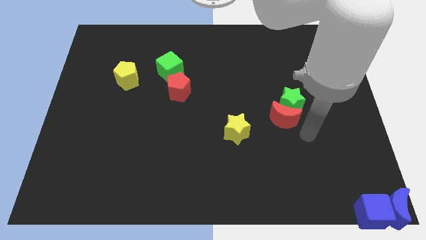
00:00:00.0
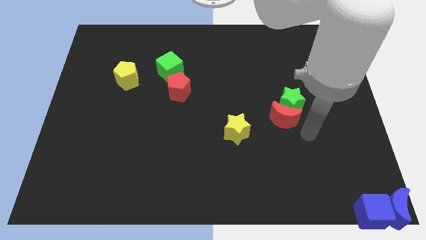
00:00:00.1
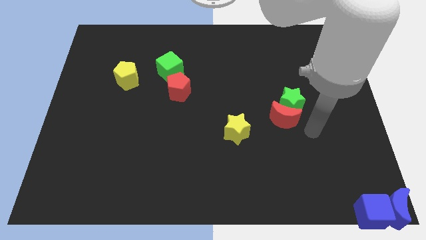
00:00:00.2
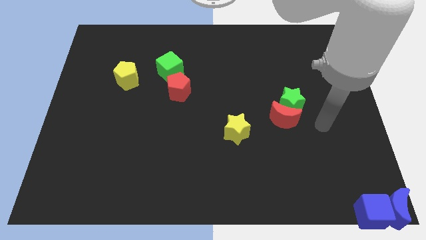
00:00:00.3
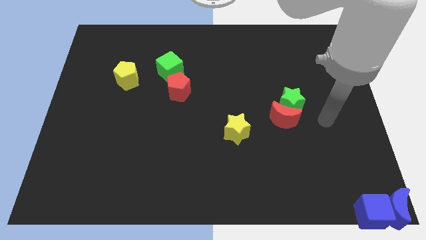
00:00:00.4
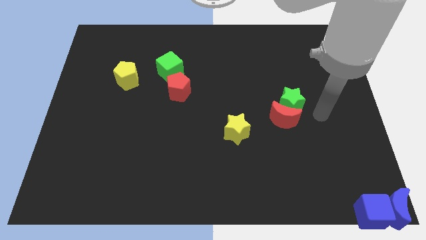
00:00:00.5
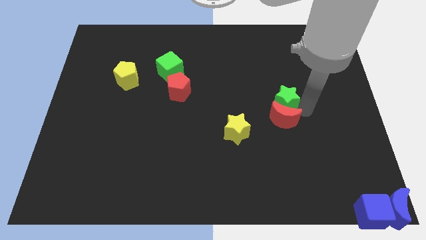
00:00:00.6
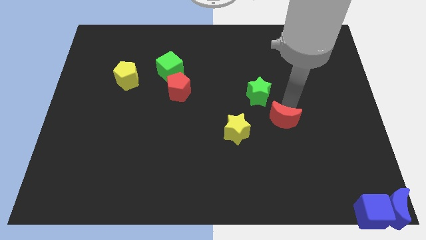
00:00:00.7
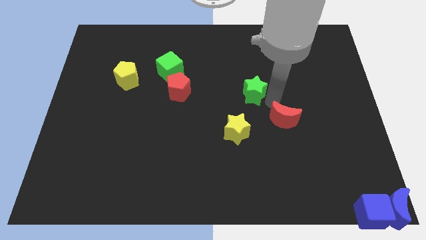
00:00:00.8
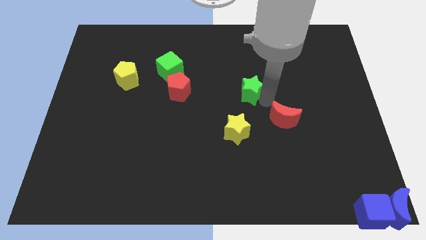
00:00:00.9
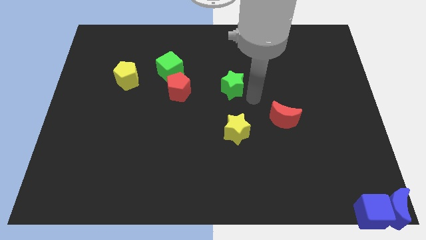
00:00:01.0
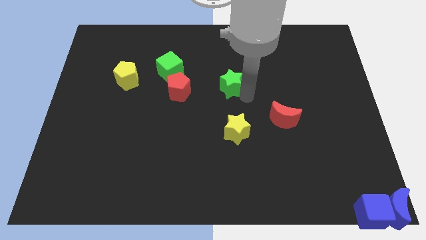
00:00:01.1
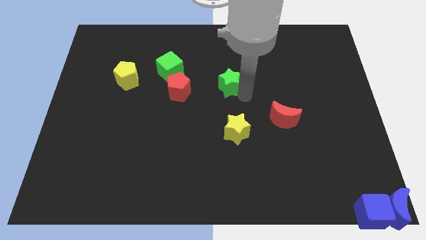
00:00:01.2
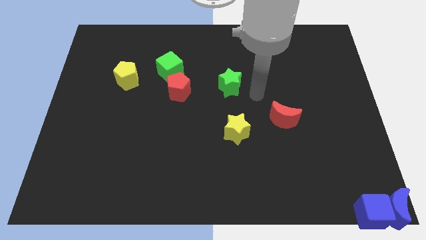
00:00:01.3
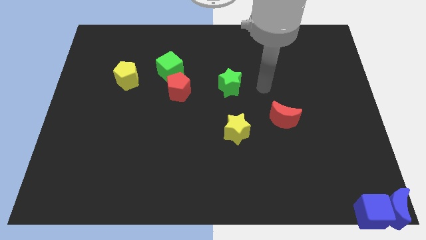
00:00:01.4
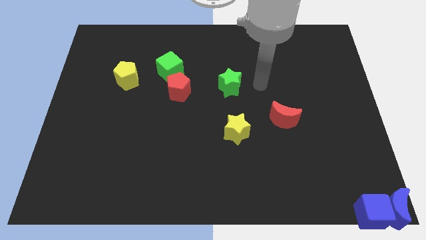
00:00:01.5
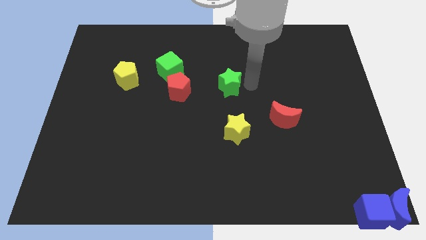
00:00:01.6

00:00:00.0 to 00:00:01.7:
place the green star above the yellow star

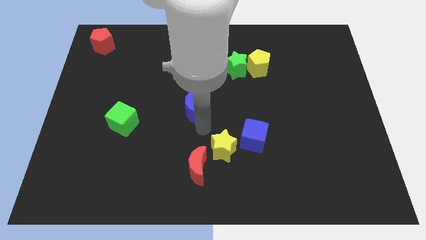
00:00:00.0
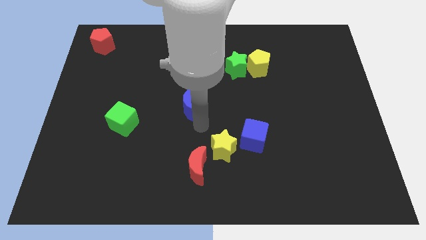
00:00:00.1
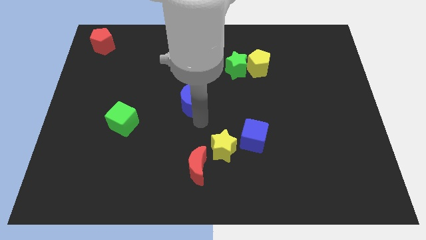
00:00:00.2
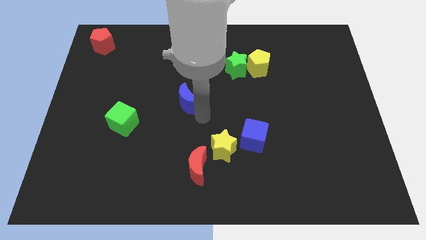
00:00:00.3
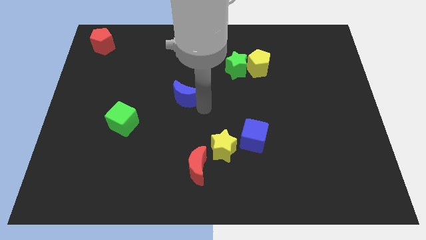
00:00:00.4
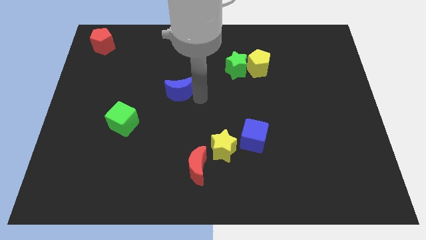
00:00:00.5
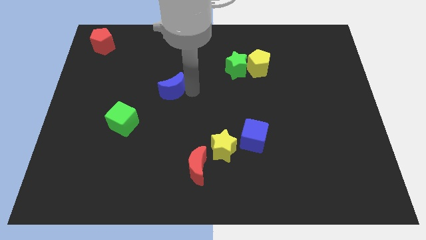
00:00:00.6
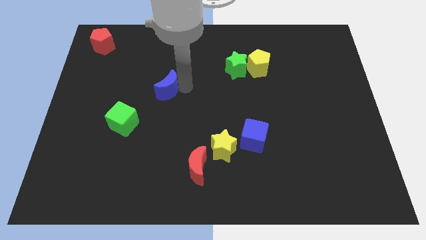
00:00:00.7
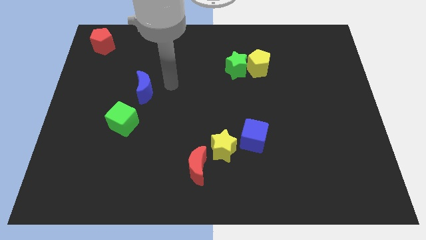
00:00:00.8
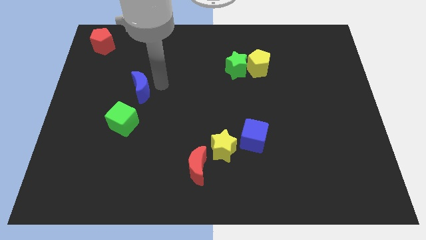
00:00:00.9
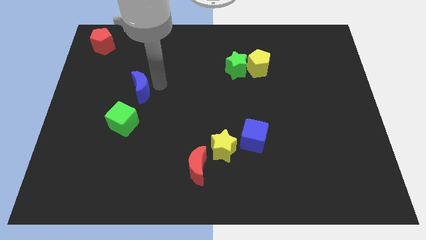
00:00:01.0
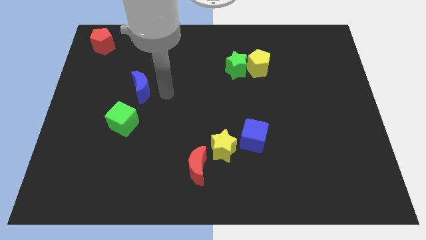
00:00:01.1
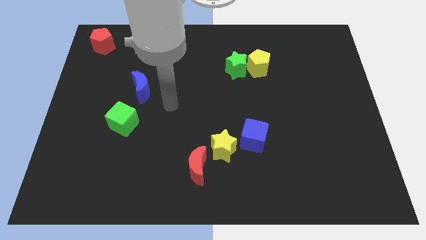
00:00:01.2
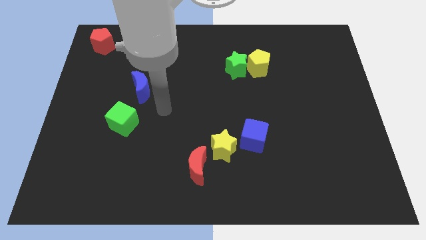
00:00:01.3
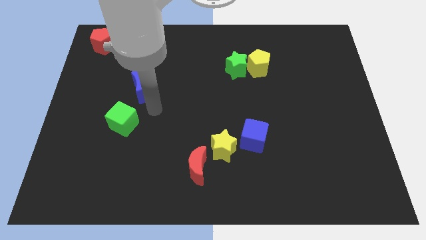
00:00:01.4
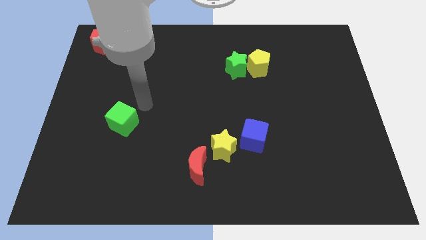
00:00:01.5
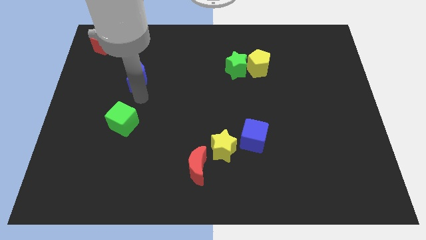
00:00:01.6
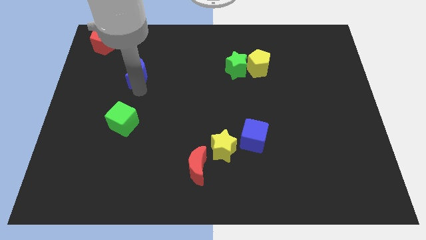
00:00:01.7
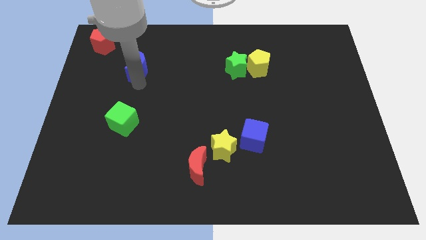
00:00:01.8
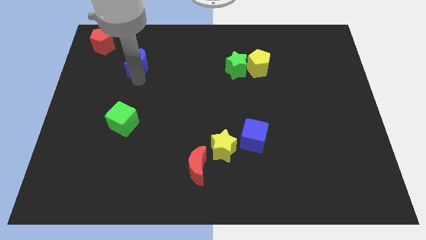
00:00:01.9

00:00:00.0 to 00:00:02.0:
place the blue semicircle vertically above the green cube

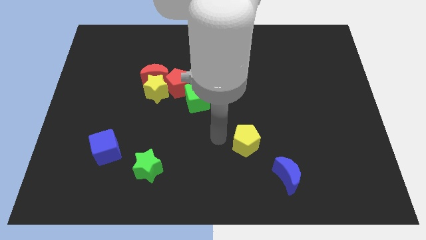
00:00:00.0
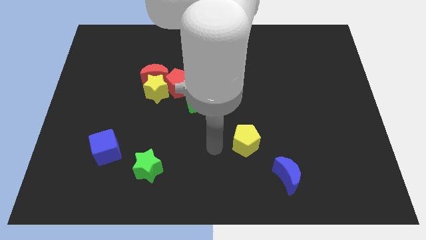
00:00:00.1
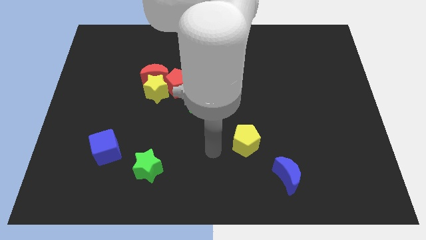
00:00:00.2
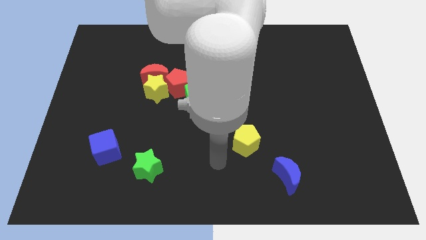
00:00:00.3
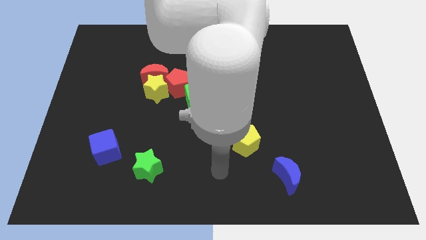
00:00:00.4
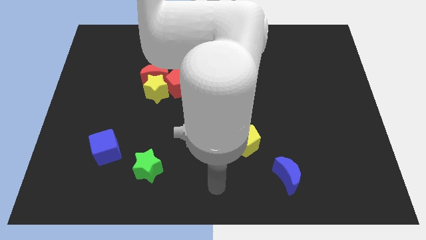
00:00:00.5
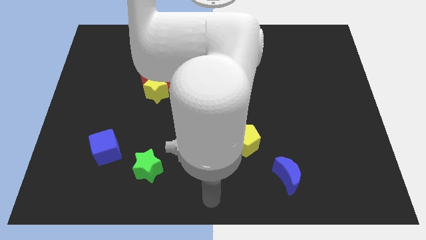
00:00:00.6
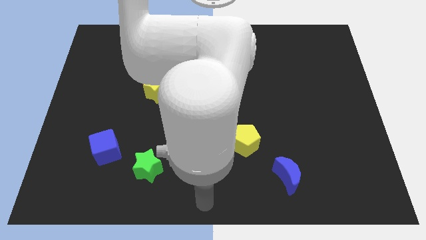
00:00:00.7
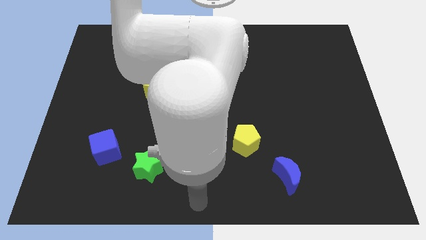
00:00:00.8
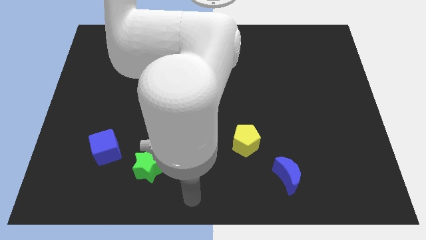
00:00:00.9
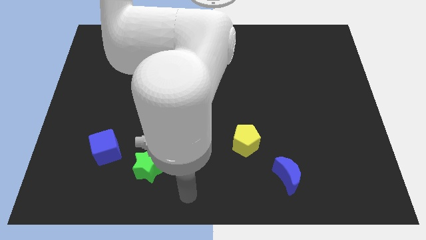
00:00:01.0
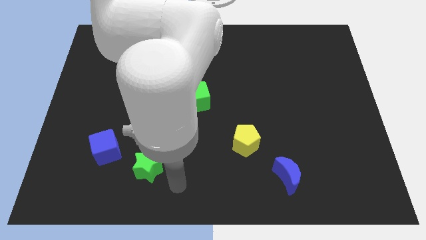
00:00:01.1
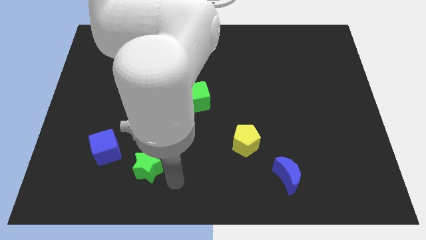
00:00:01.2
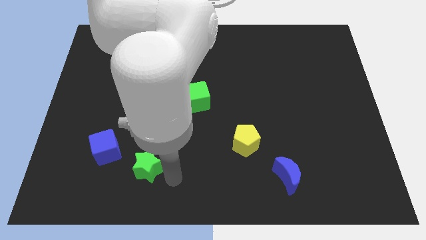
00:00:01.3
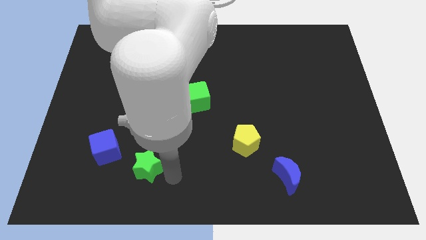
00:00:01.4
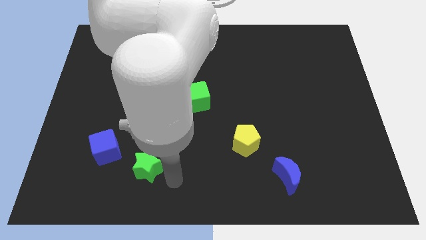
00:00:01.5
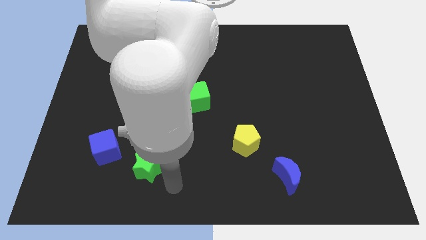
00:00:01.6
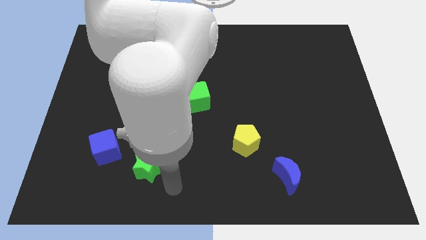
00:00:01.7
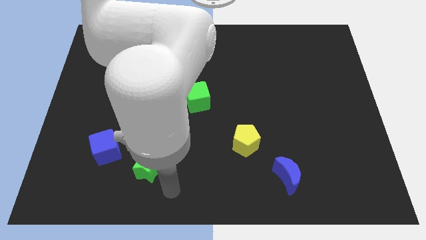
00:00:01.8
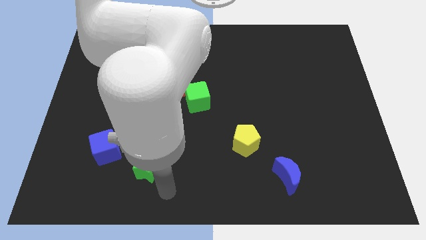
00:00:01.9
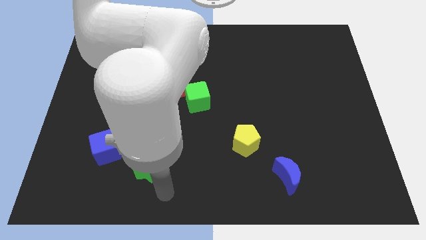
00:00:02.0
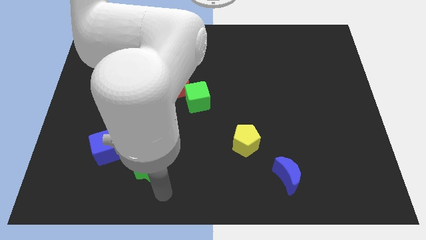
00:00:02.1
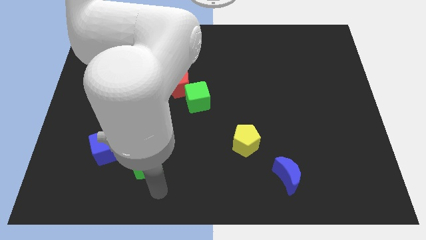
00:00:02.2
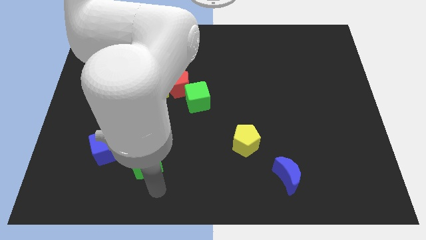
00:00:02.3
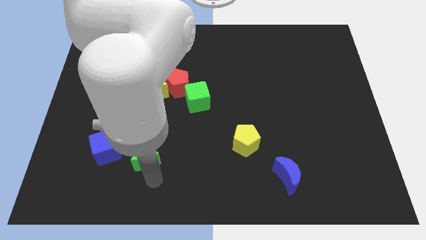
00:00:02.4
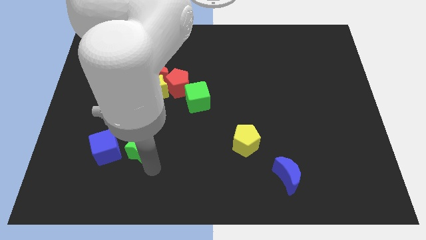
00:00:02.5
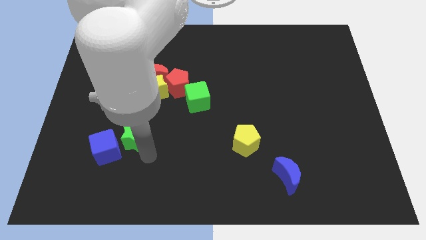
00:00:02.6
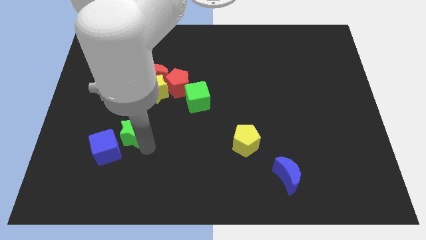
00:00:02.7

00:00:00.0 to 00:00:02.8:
move green star slightly up

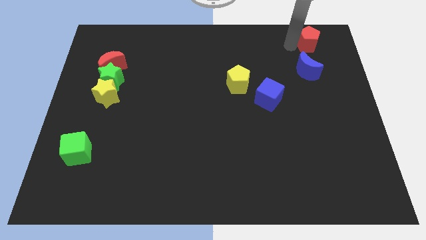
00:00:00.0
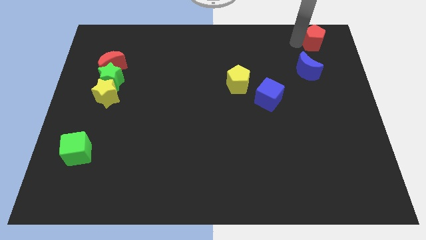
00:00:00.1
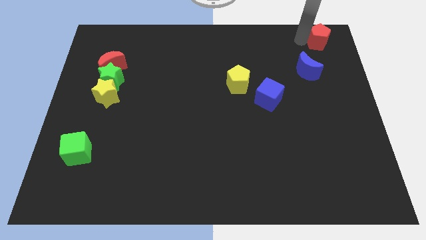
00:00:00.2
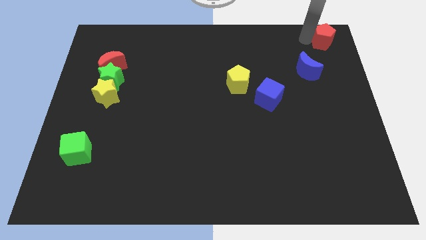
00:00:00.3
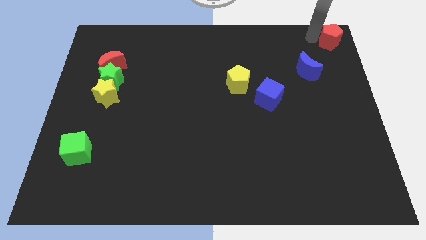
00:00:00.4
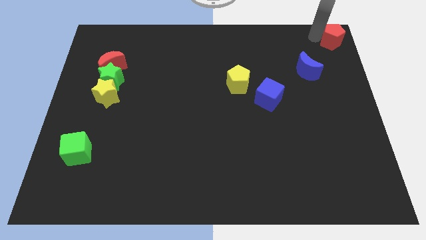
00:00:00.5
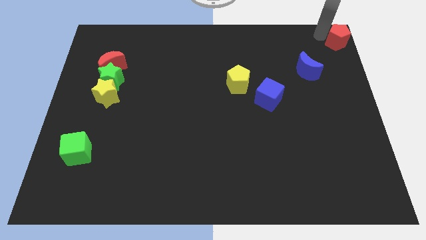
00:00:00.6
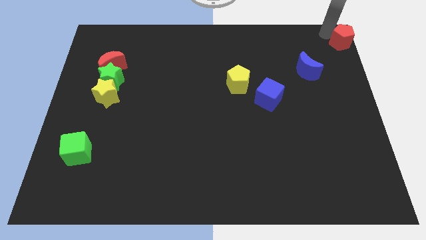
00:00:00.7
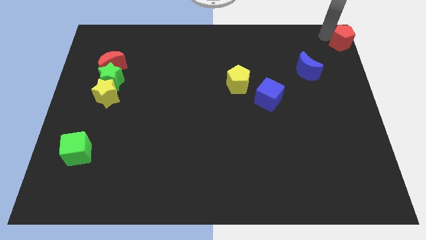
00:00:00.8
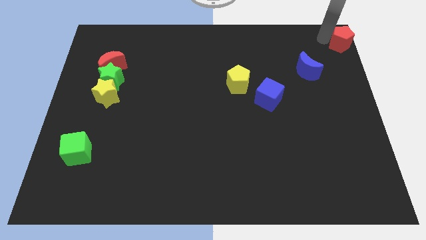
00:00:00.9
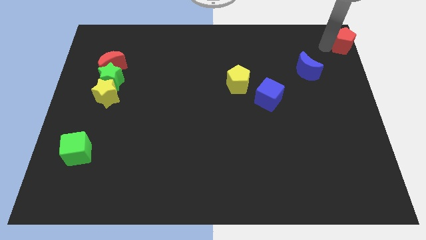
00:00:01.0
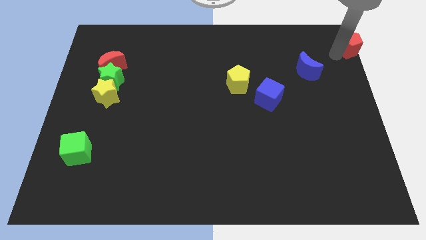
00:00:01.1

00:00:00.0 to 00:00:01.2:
push the red pentagon to the top right of the board

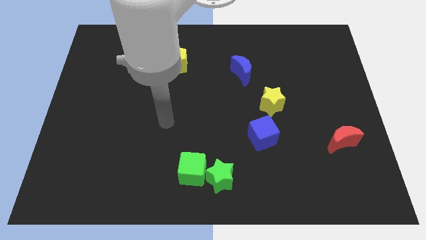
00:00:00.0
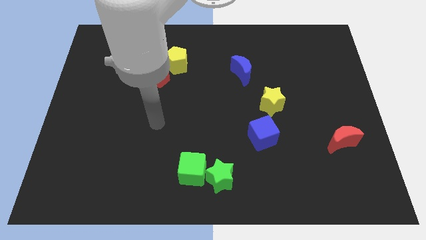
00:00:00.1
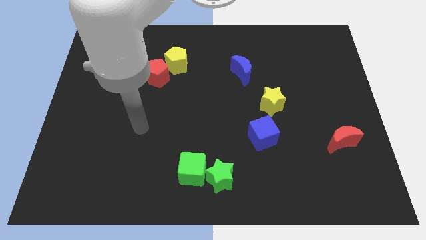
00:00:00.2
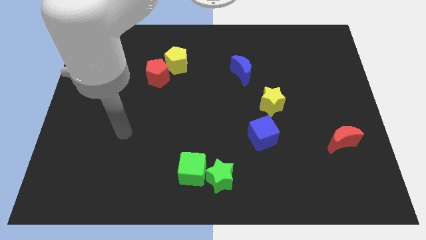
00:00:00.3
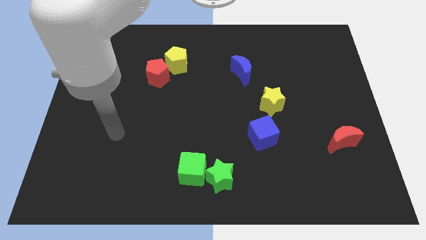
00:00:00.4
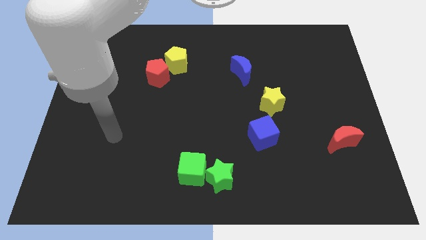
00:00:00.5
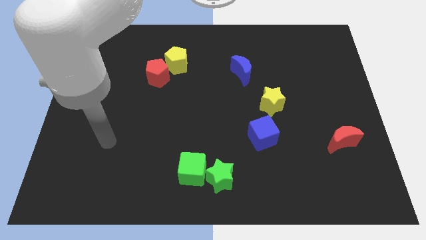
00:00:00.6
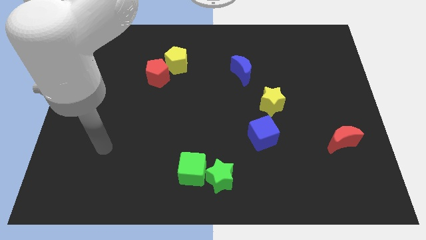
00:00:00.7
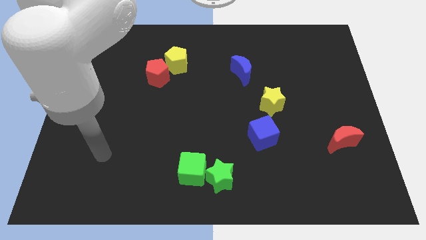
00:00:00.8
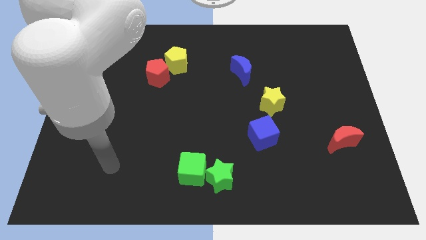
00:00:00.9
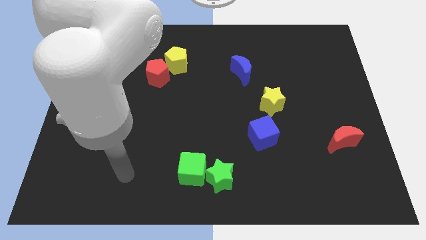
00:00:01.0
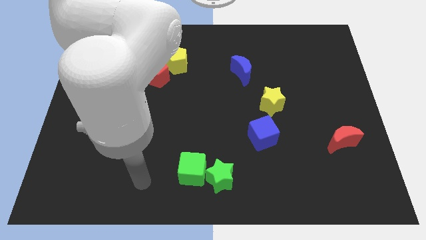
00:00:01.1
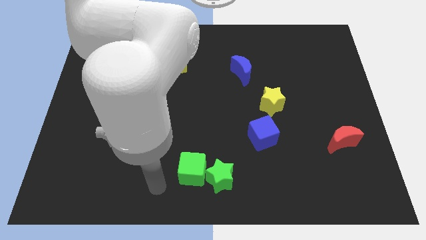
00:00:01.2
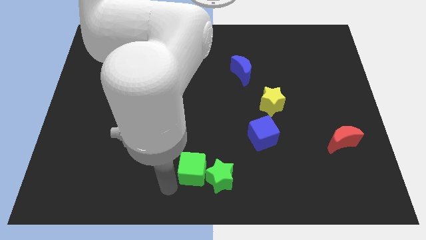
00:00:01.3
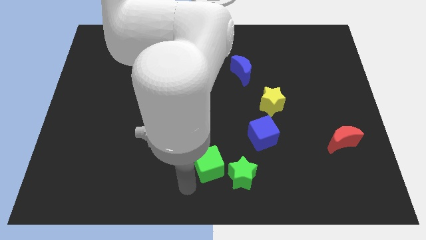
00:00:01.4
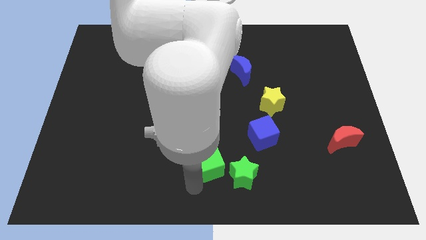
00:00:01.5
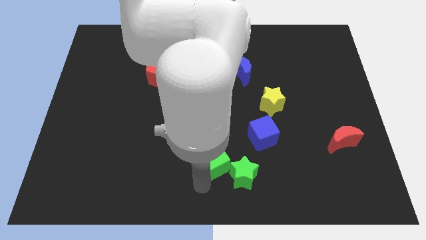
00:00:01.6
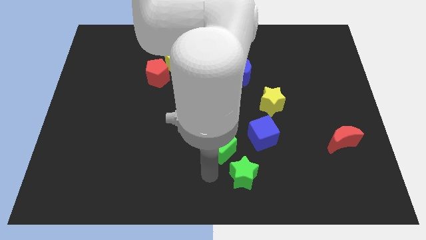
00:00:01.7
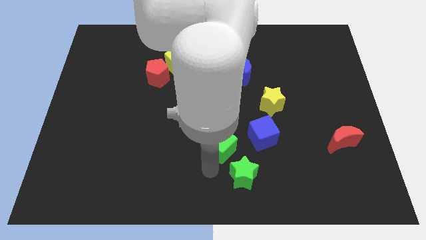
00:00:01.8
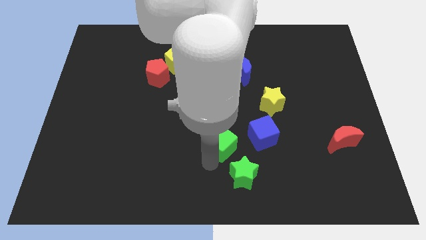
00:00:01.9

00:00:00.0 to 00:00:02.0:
separate the green cube and green star
